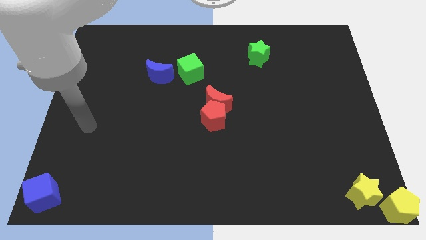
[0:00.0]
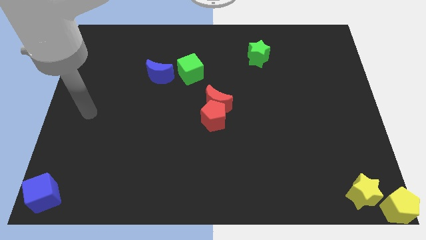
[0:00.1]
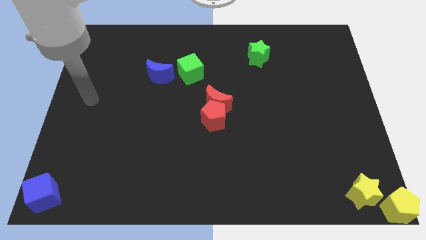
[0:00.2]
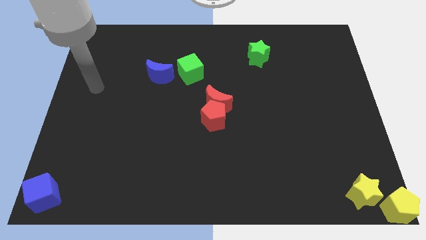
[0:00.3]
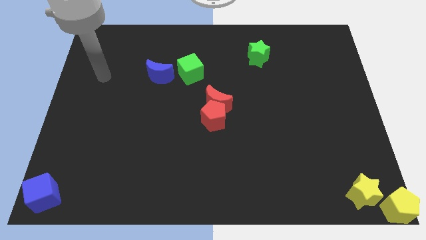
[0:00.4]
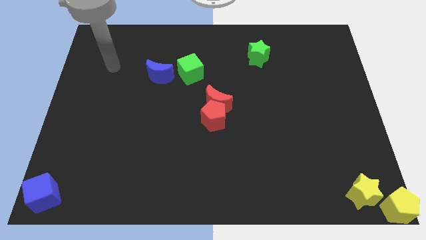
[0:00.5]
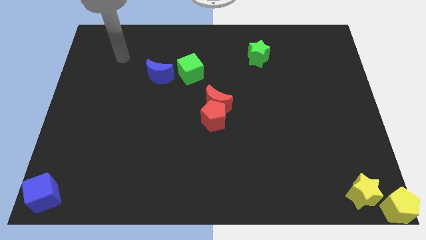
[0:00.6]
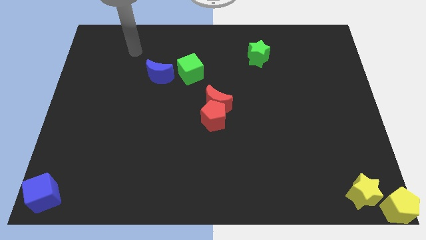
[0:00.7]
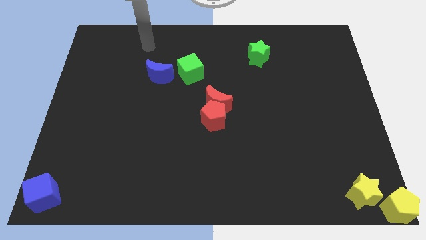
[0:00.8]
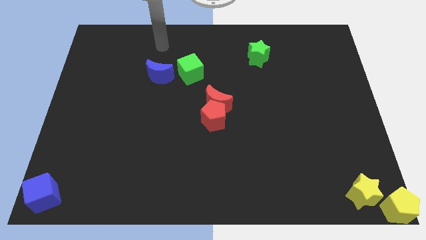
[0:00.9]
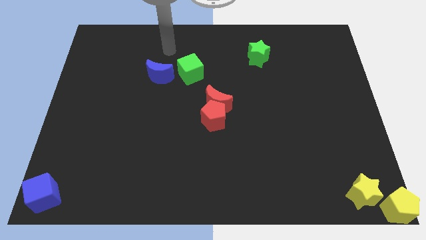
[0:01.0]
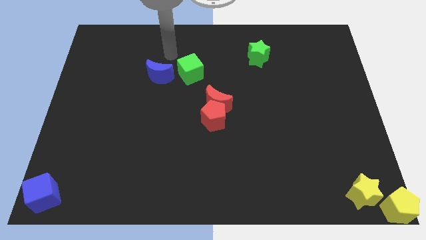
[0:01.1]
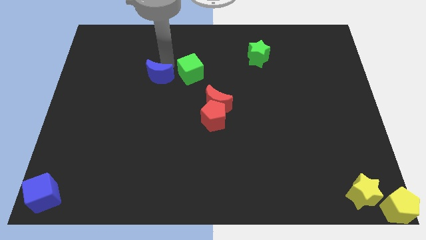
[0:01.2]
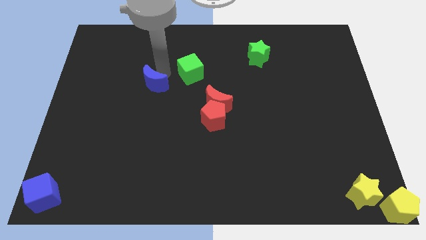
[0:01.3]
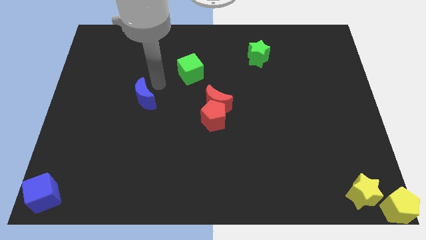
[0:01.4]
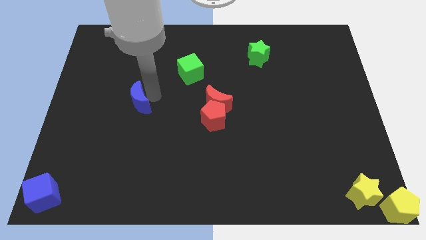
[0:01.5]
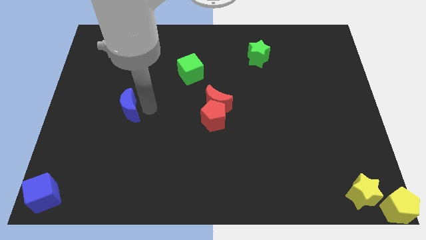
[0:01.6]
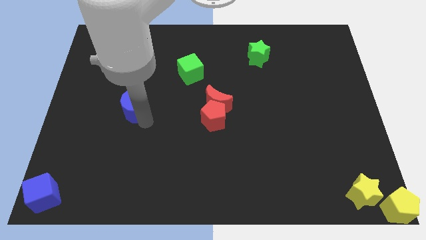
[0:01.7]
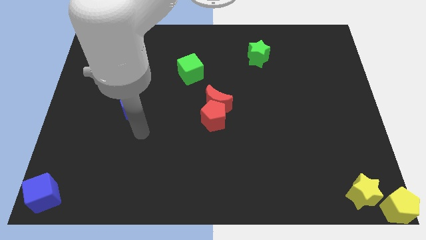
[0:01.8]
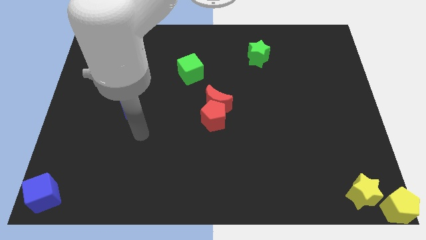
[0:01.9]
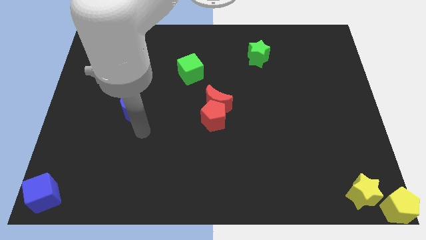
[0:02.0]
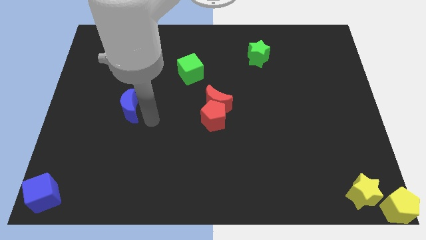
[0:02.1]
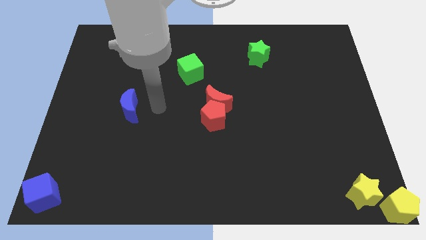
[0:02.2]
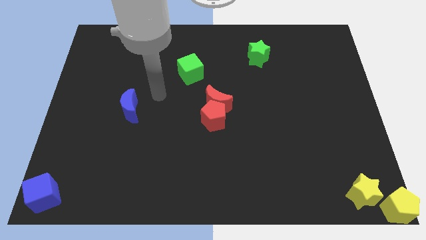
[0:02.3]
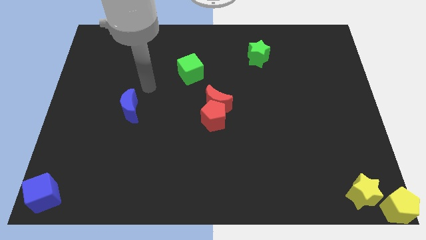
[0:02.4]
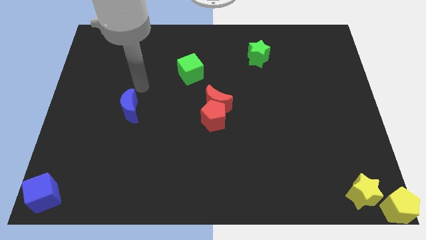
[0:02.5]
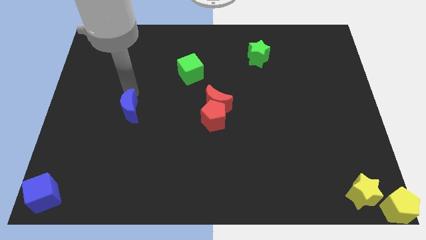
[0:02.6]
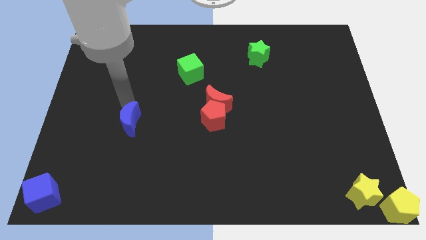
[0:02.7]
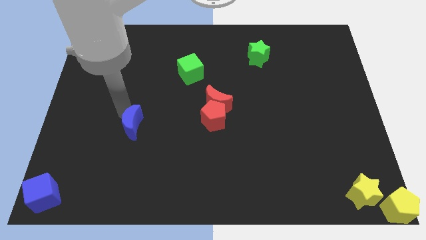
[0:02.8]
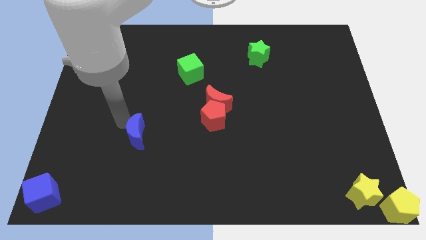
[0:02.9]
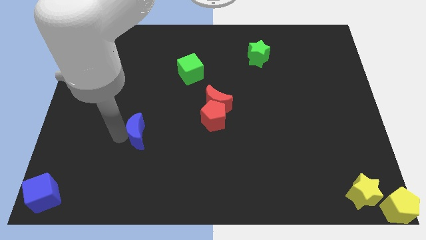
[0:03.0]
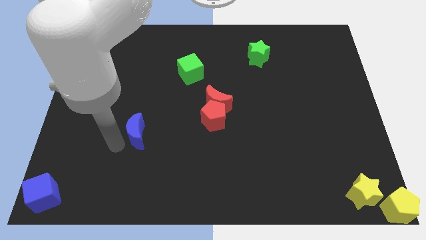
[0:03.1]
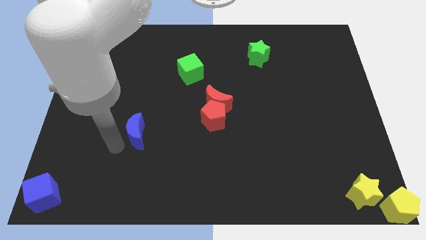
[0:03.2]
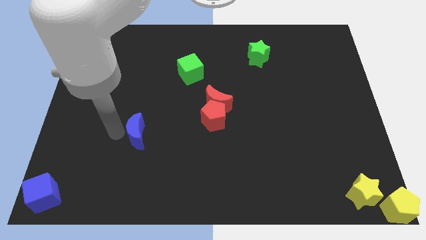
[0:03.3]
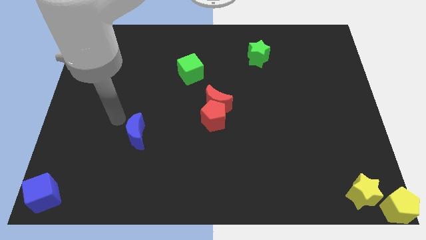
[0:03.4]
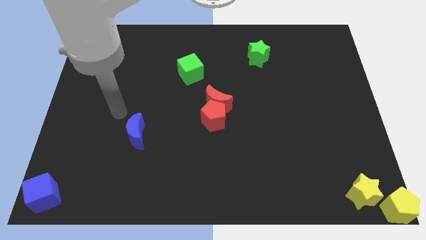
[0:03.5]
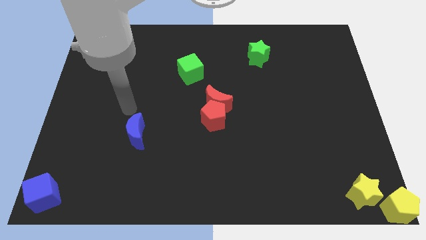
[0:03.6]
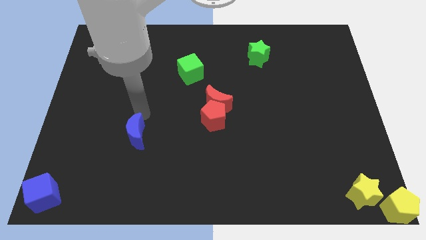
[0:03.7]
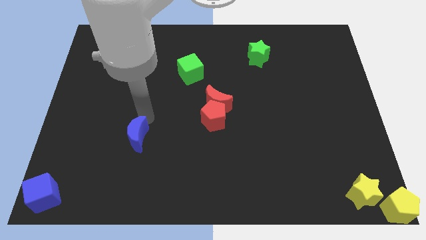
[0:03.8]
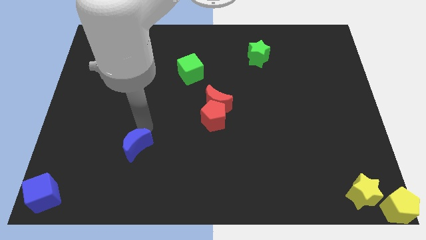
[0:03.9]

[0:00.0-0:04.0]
place the blue moon between red pentagon and blue cube

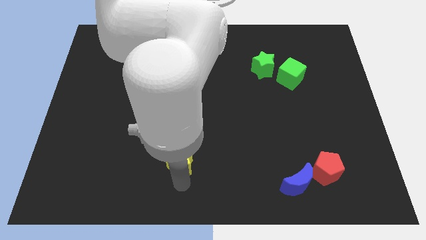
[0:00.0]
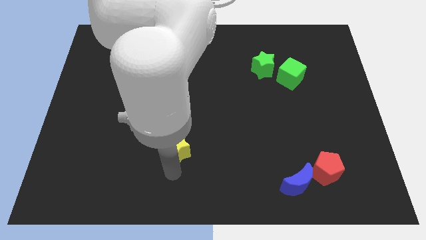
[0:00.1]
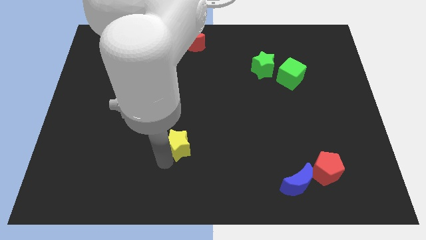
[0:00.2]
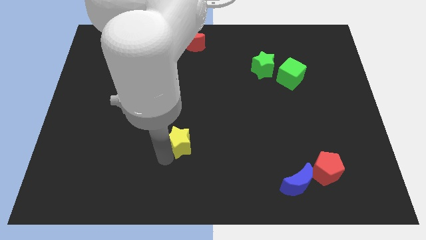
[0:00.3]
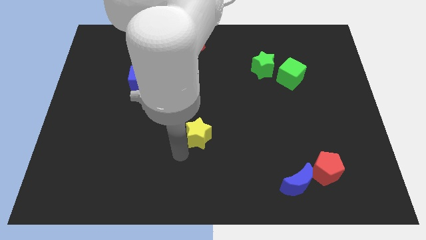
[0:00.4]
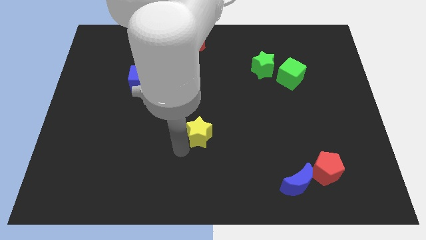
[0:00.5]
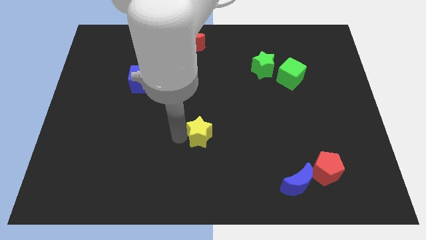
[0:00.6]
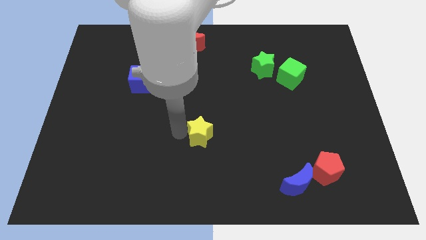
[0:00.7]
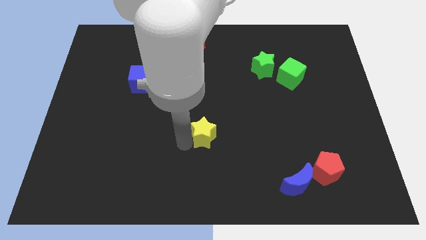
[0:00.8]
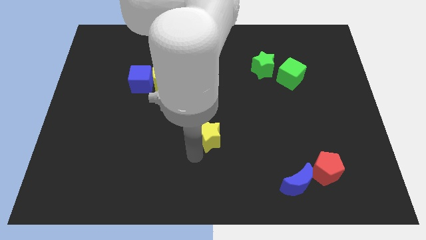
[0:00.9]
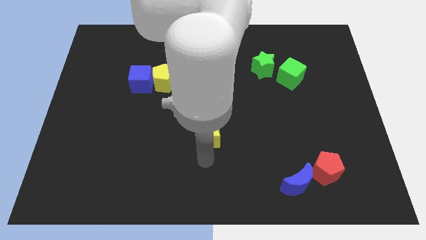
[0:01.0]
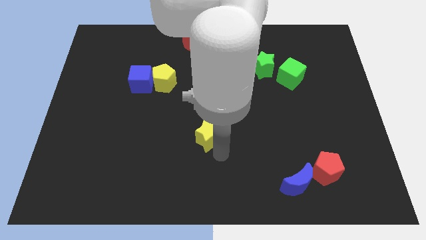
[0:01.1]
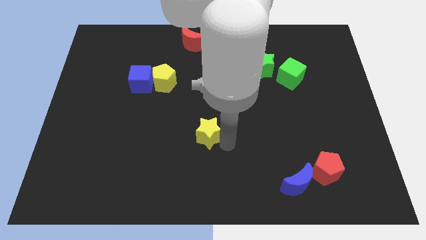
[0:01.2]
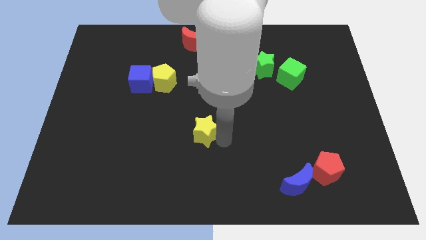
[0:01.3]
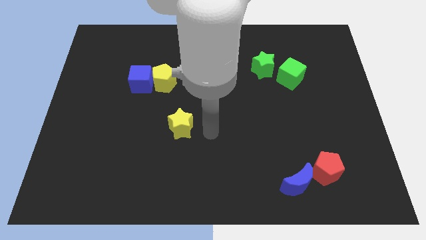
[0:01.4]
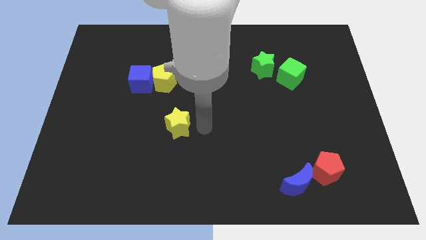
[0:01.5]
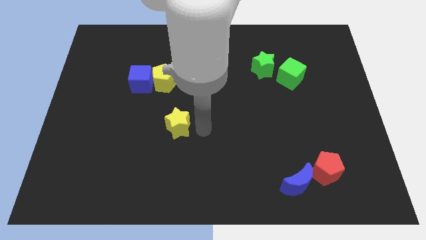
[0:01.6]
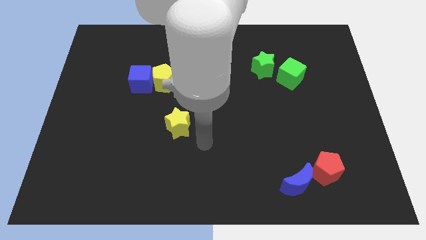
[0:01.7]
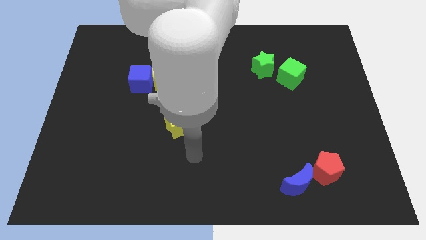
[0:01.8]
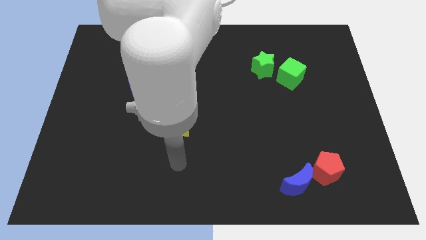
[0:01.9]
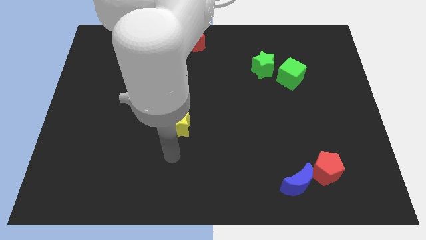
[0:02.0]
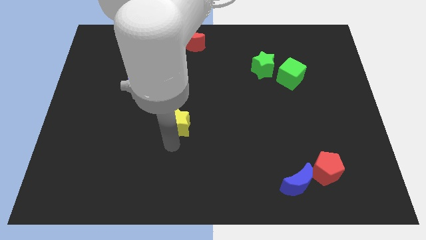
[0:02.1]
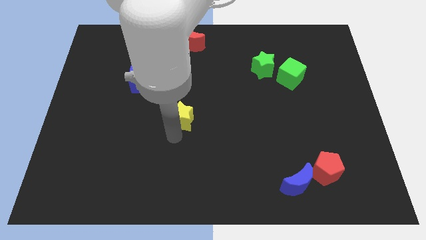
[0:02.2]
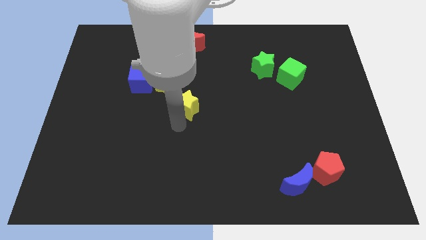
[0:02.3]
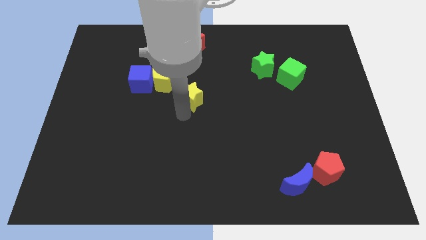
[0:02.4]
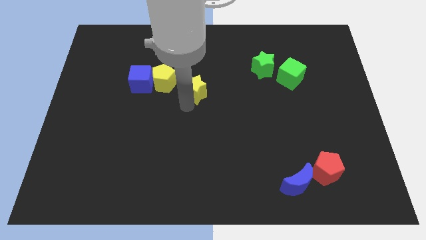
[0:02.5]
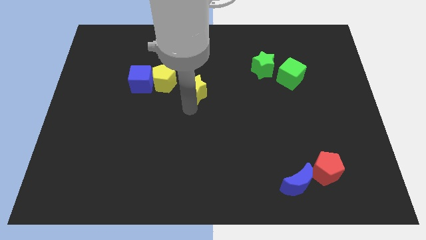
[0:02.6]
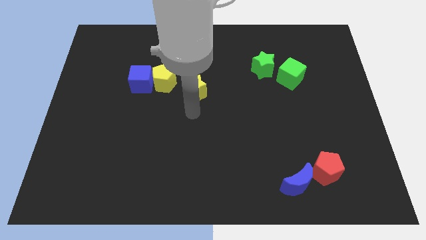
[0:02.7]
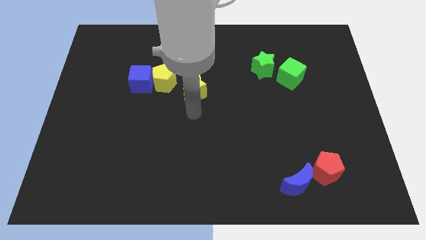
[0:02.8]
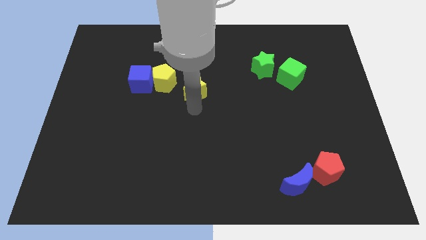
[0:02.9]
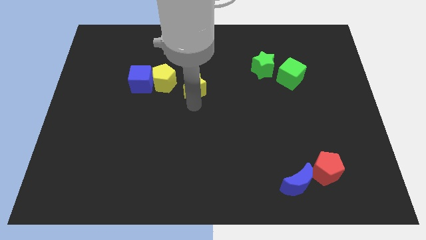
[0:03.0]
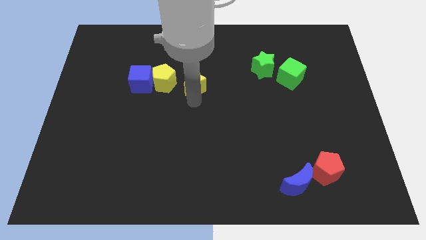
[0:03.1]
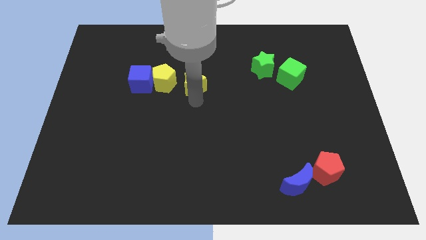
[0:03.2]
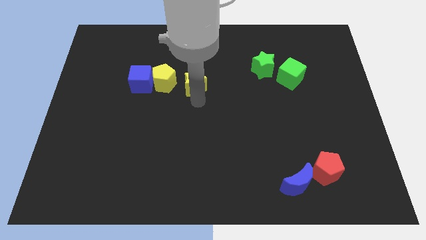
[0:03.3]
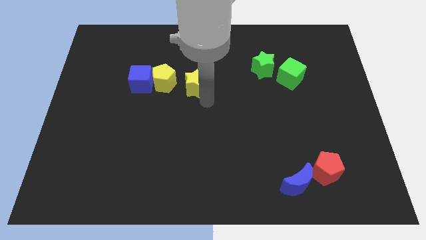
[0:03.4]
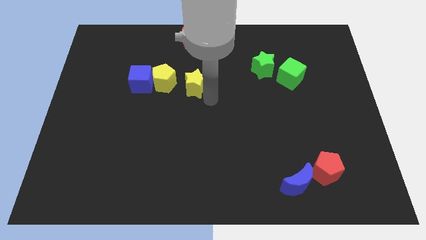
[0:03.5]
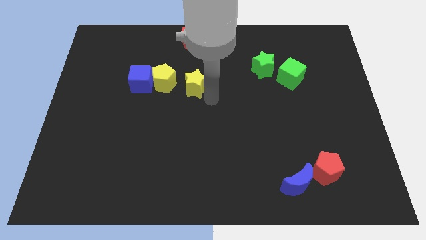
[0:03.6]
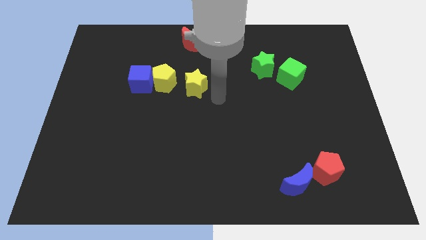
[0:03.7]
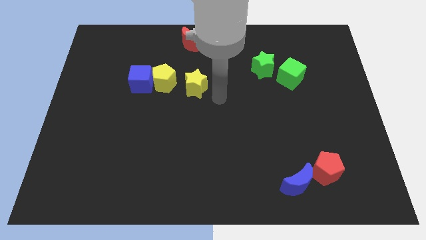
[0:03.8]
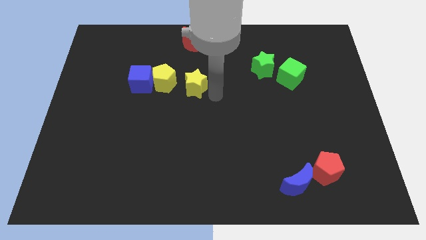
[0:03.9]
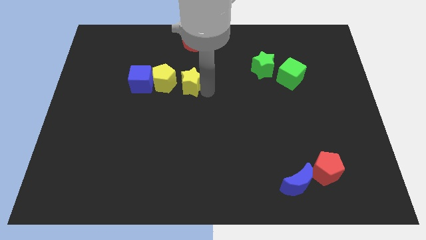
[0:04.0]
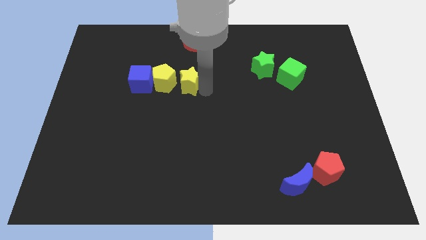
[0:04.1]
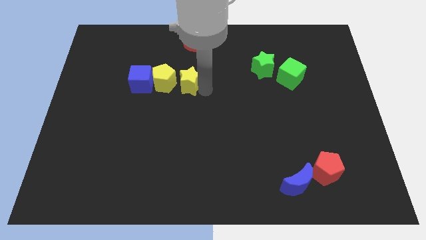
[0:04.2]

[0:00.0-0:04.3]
move yellow star towards yellow pentagon

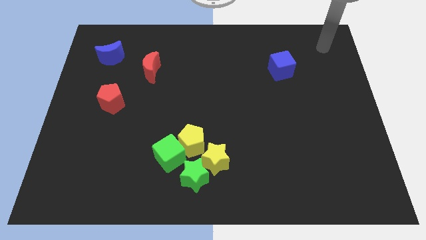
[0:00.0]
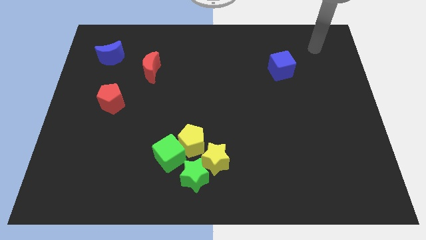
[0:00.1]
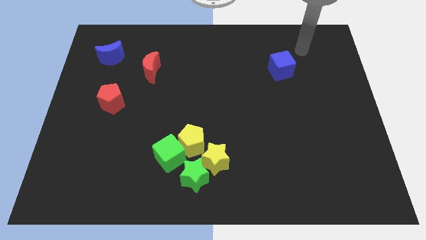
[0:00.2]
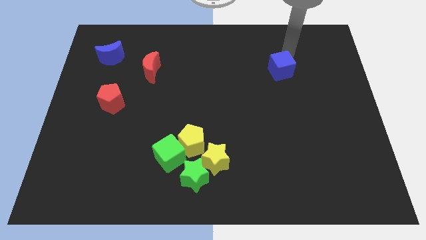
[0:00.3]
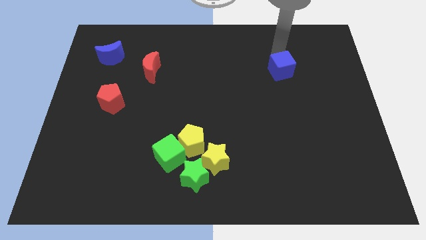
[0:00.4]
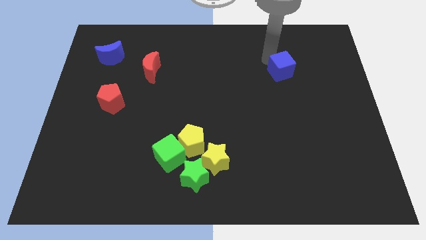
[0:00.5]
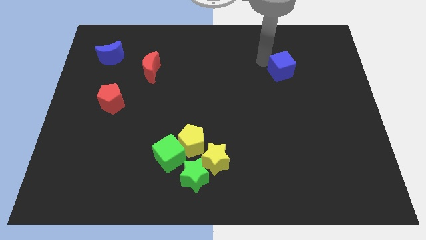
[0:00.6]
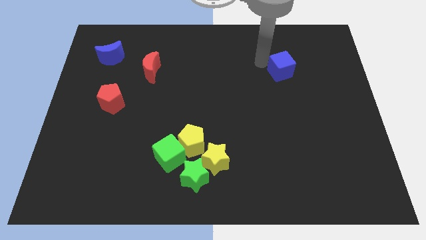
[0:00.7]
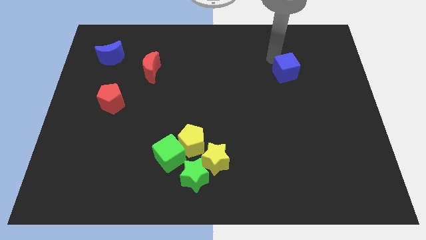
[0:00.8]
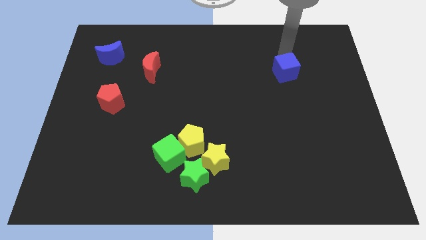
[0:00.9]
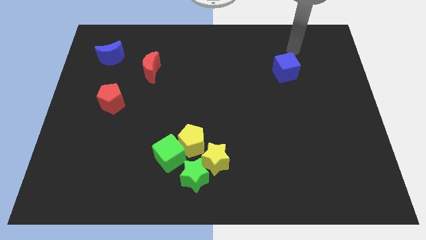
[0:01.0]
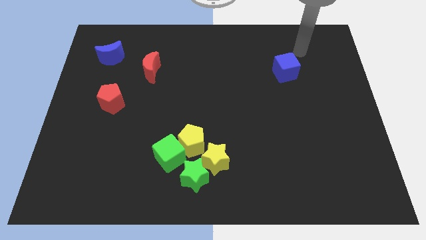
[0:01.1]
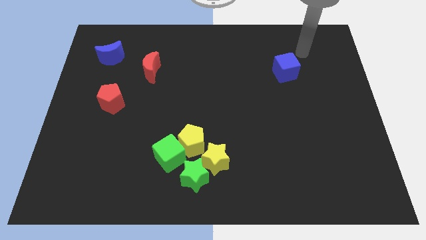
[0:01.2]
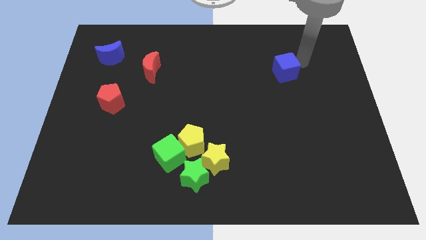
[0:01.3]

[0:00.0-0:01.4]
move the blue cube slightly to the right
